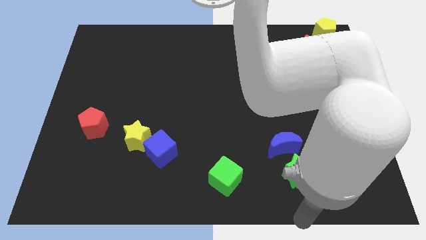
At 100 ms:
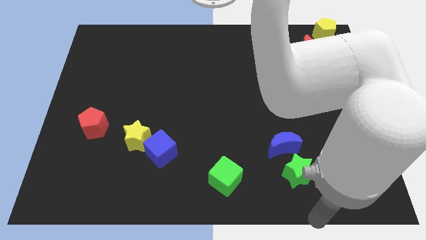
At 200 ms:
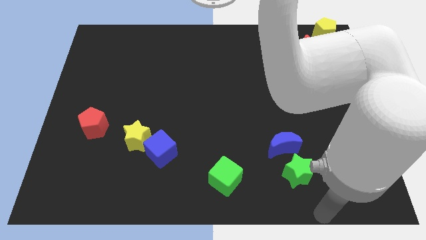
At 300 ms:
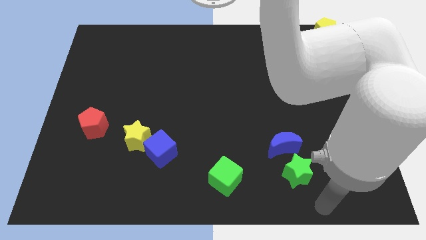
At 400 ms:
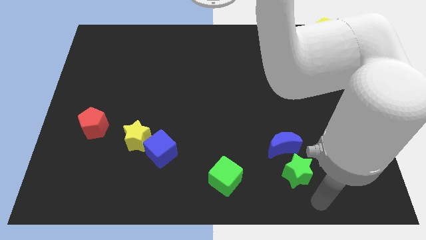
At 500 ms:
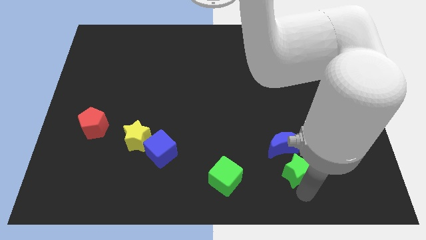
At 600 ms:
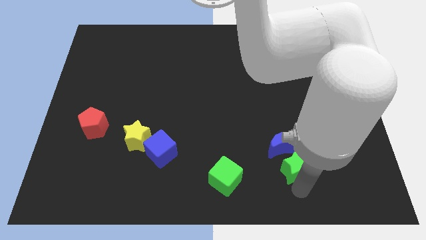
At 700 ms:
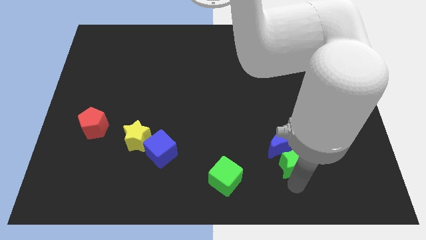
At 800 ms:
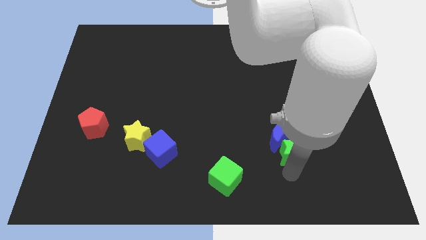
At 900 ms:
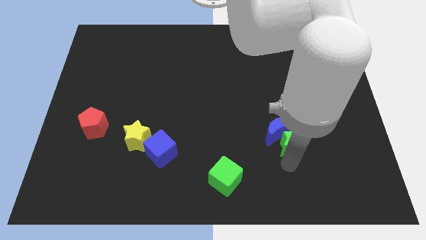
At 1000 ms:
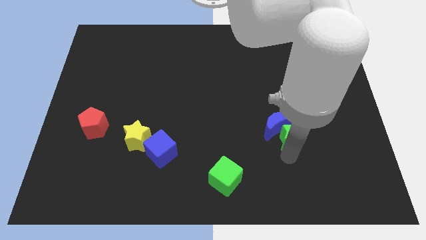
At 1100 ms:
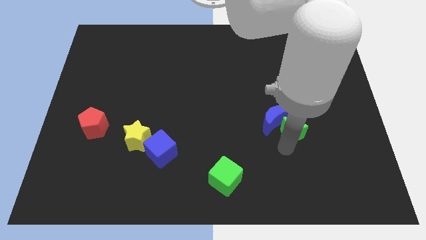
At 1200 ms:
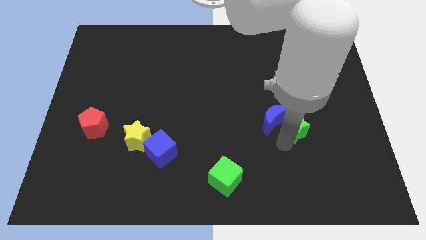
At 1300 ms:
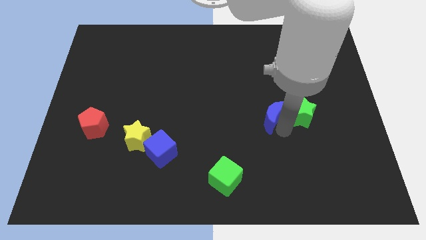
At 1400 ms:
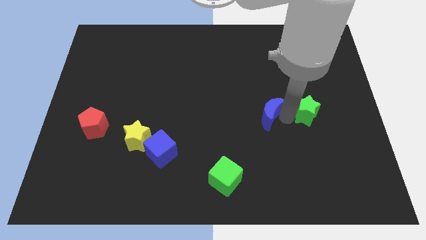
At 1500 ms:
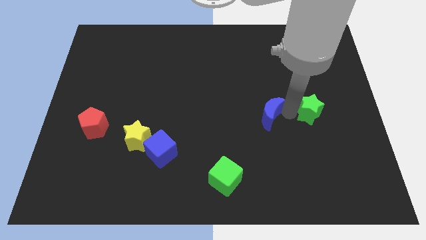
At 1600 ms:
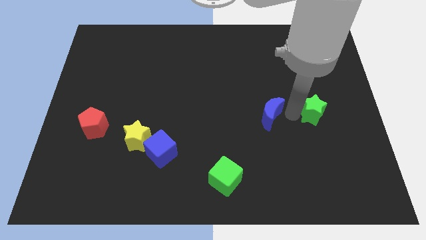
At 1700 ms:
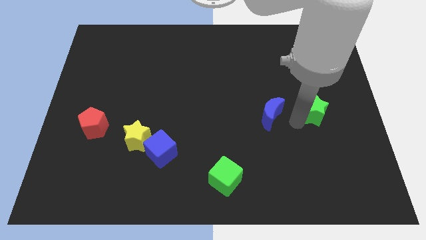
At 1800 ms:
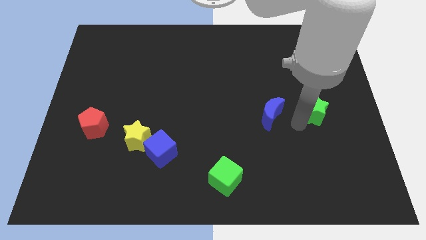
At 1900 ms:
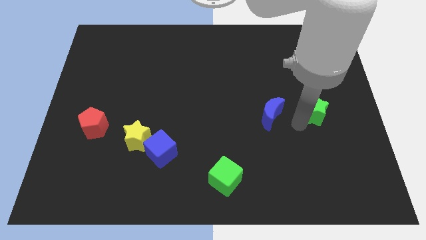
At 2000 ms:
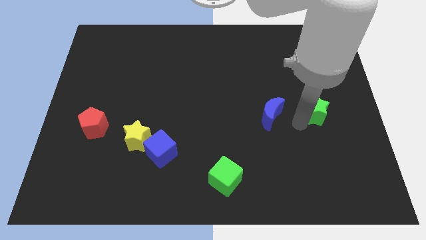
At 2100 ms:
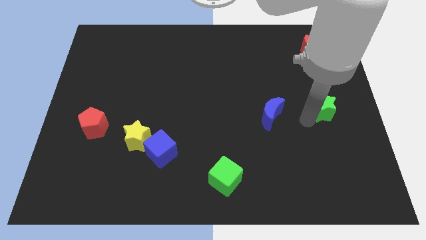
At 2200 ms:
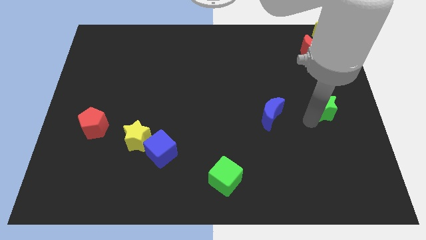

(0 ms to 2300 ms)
push green star towards center right side of the board

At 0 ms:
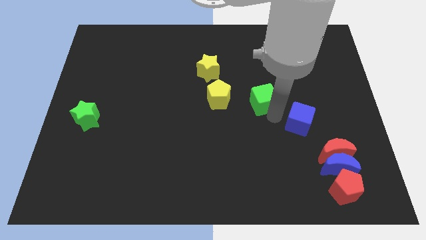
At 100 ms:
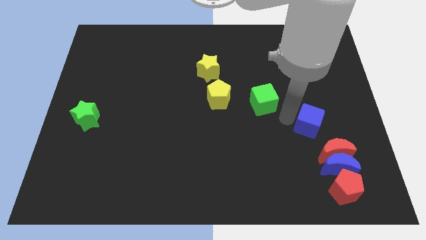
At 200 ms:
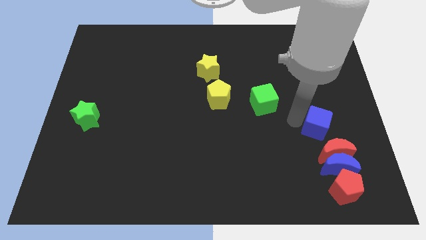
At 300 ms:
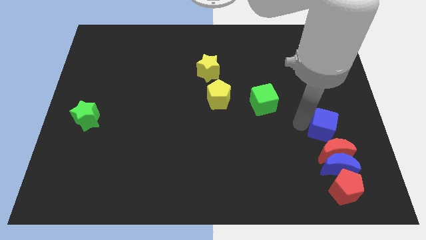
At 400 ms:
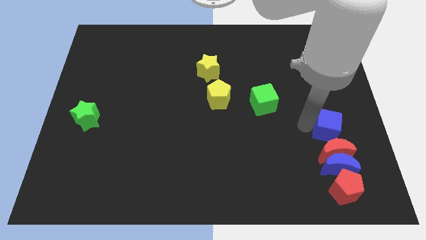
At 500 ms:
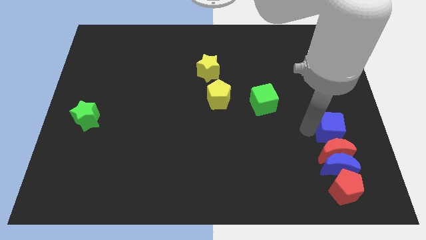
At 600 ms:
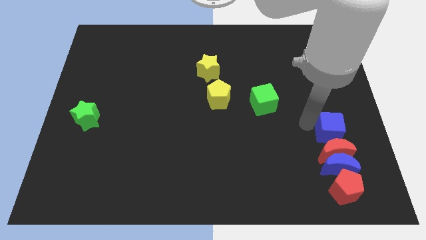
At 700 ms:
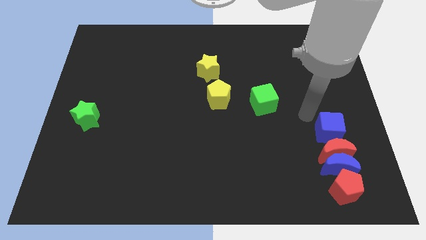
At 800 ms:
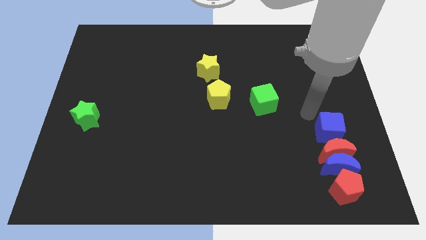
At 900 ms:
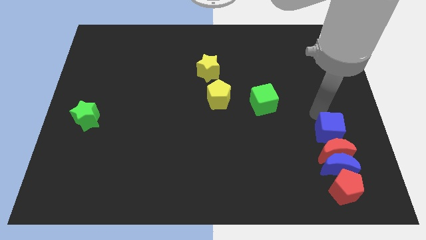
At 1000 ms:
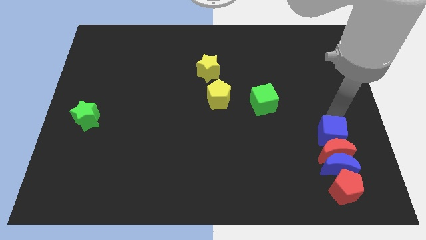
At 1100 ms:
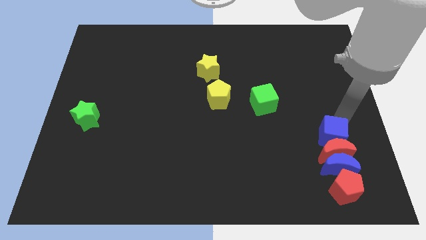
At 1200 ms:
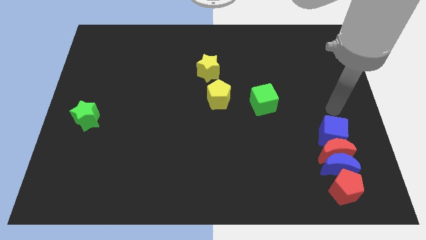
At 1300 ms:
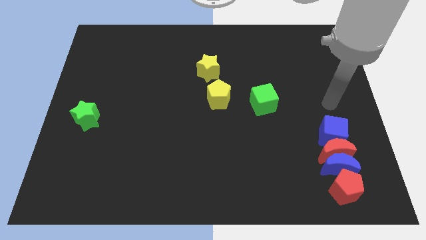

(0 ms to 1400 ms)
place blue cube above the red crescent

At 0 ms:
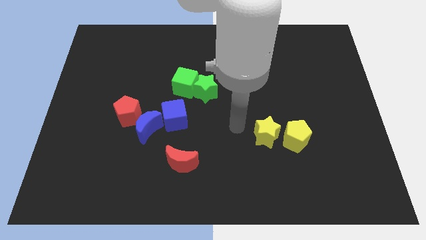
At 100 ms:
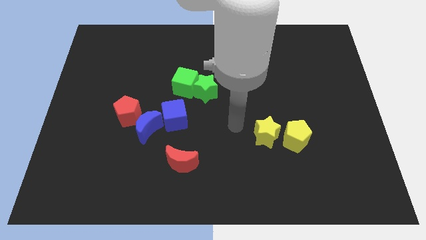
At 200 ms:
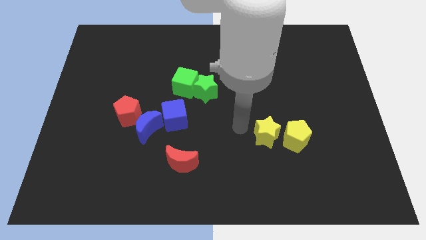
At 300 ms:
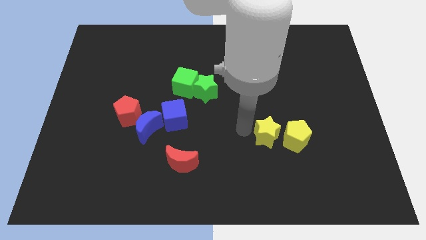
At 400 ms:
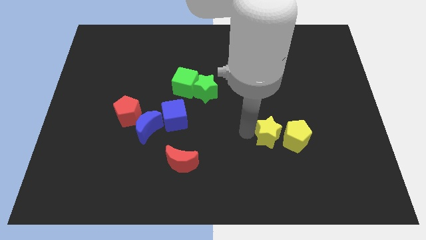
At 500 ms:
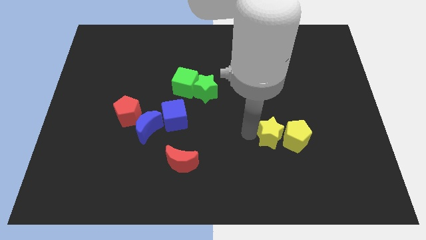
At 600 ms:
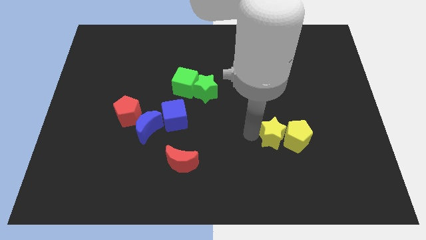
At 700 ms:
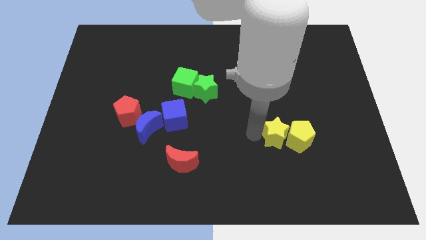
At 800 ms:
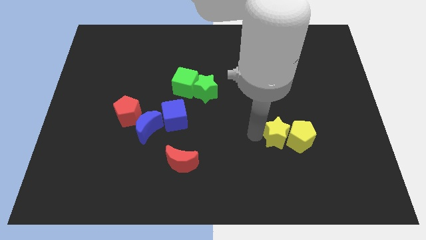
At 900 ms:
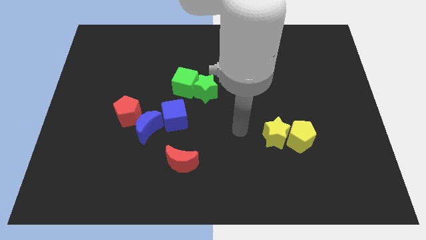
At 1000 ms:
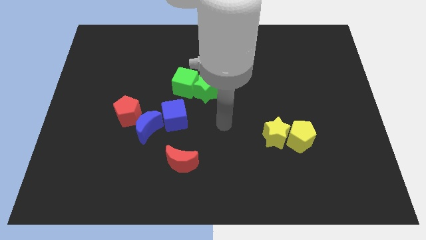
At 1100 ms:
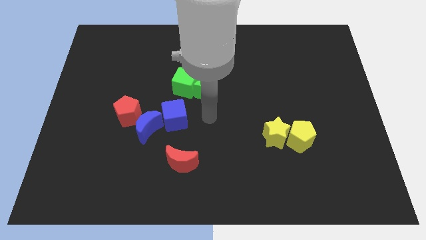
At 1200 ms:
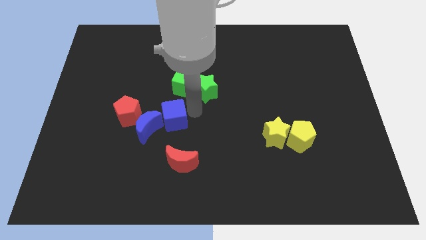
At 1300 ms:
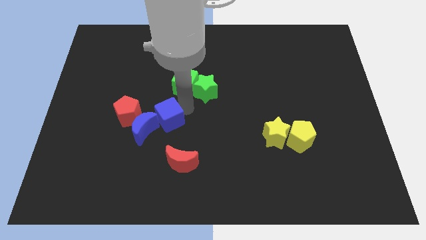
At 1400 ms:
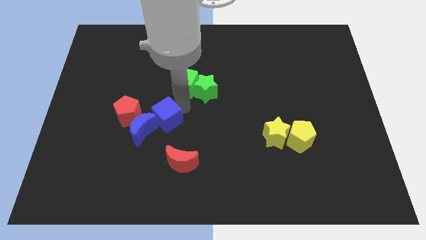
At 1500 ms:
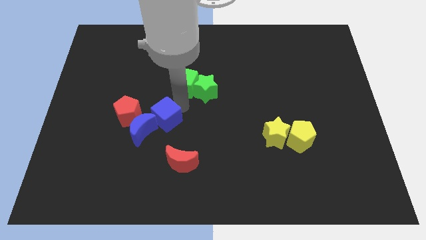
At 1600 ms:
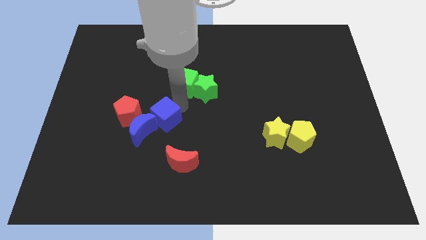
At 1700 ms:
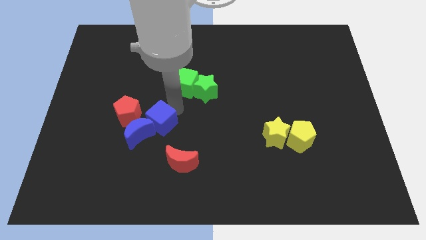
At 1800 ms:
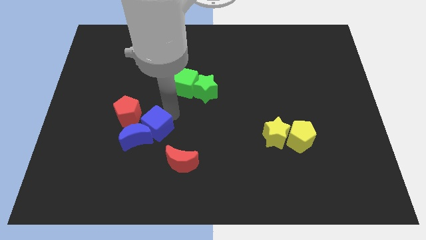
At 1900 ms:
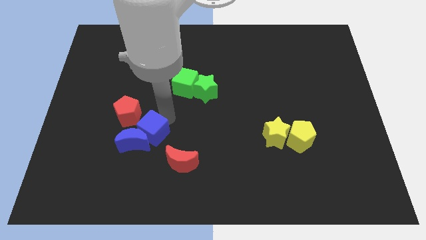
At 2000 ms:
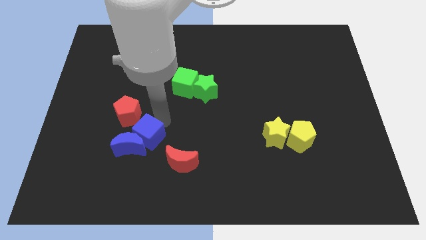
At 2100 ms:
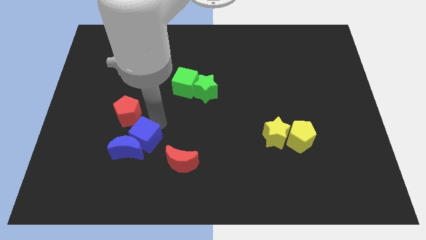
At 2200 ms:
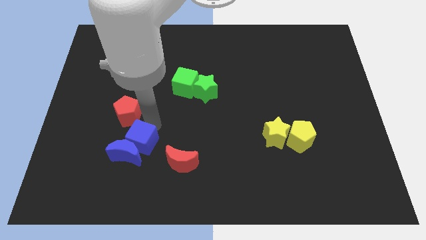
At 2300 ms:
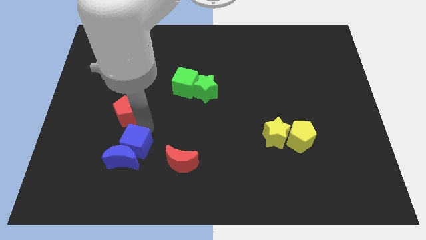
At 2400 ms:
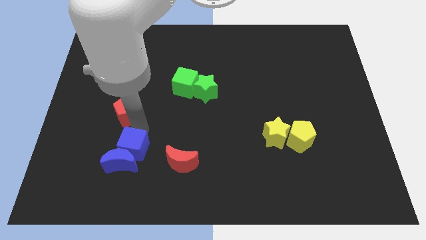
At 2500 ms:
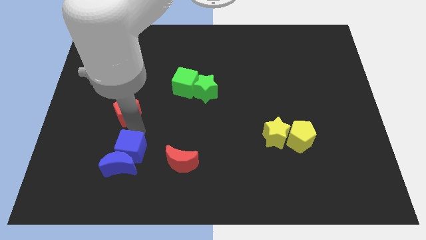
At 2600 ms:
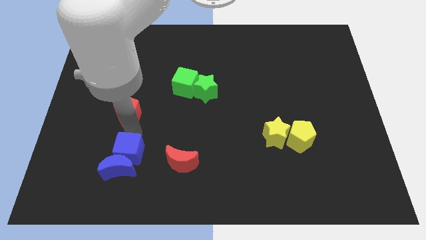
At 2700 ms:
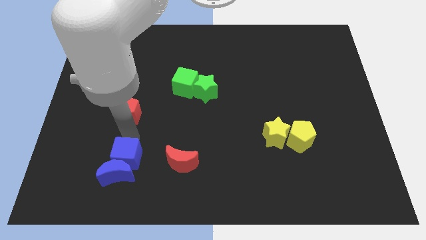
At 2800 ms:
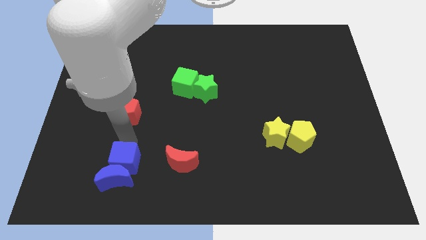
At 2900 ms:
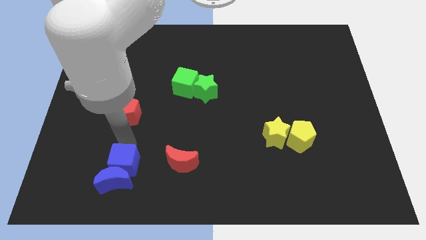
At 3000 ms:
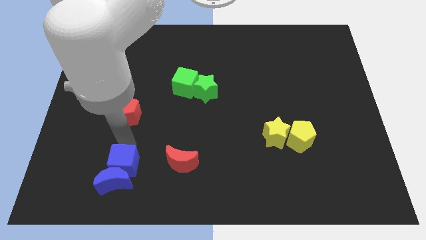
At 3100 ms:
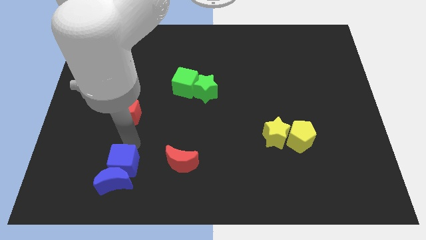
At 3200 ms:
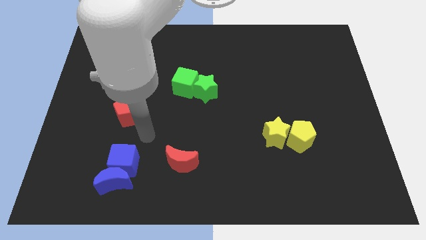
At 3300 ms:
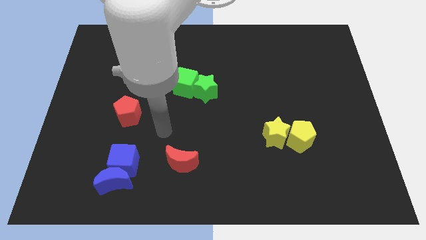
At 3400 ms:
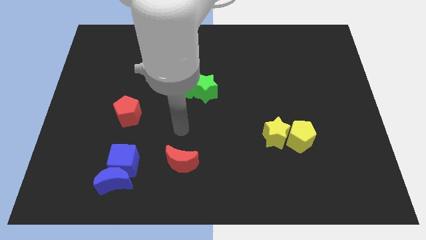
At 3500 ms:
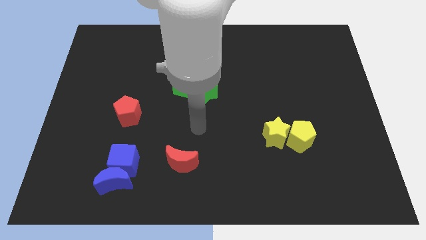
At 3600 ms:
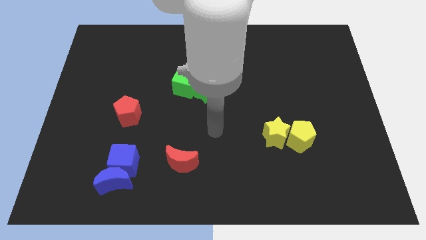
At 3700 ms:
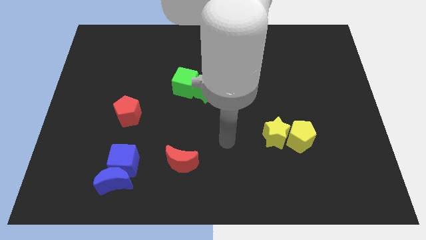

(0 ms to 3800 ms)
drag both the blue cube and blue crescent towards the bottom side of the board

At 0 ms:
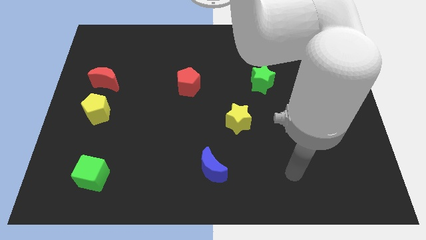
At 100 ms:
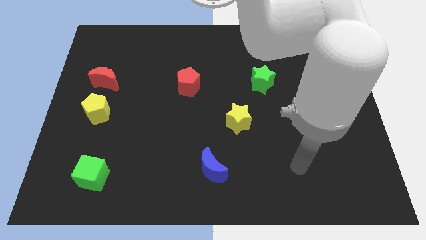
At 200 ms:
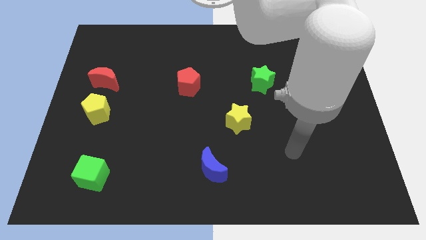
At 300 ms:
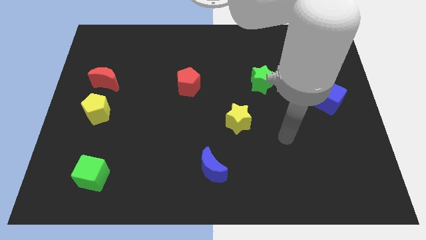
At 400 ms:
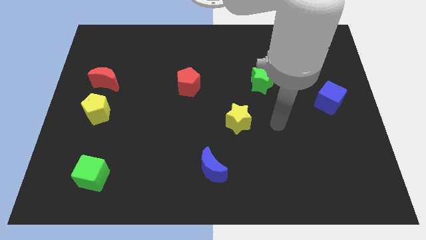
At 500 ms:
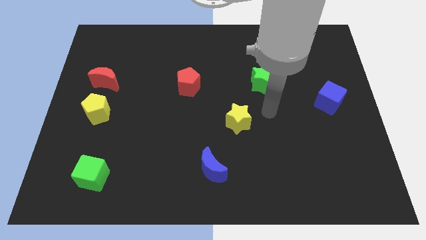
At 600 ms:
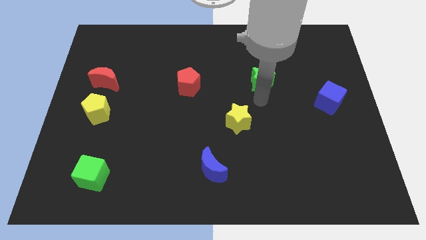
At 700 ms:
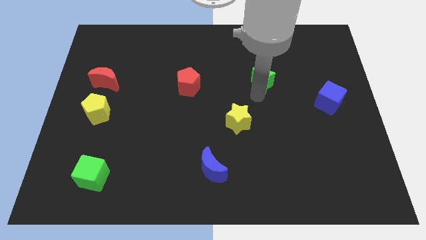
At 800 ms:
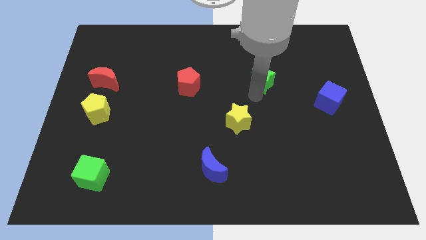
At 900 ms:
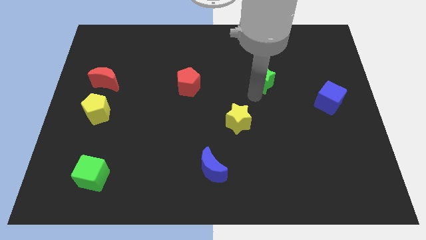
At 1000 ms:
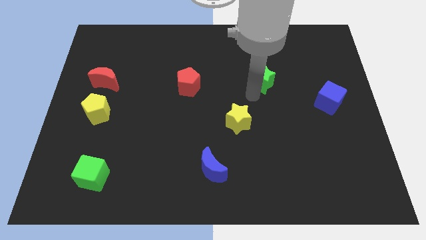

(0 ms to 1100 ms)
place your arm to the bottom of the green star

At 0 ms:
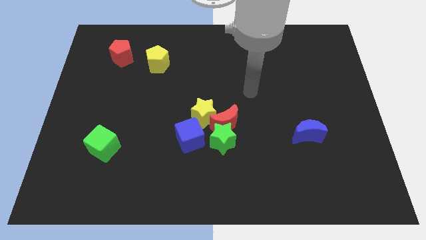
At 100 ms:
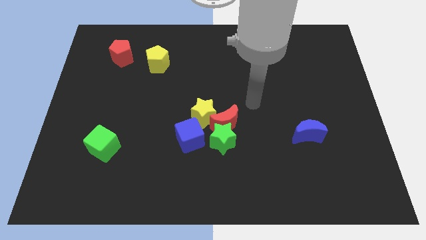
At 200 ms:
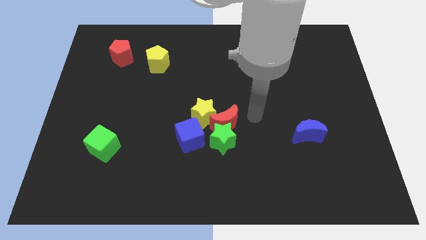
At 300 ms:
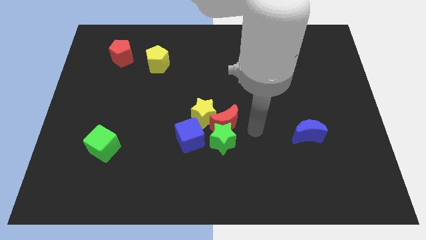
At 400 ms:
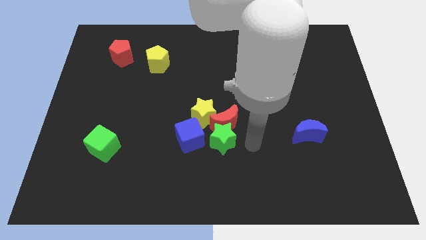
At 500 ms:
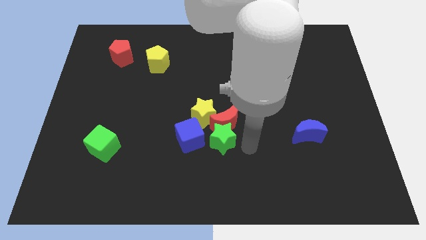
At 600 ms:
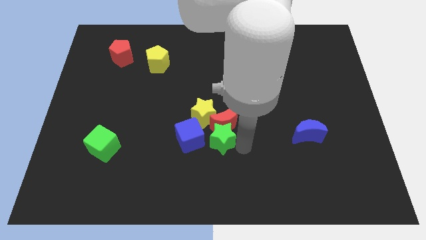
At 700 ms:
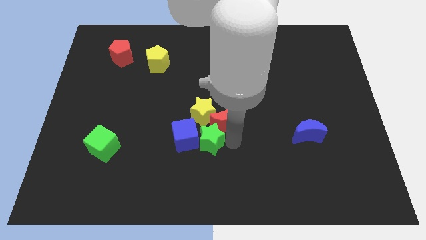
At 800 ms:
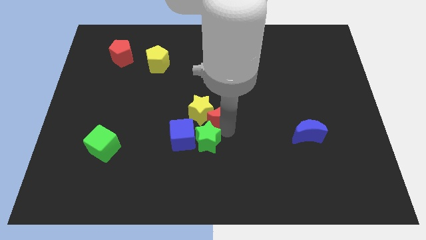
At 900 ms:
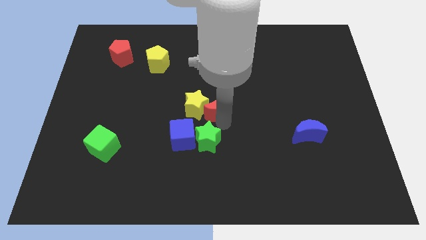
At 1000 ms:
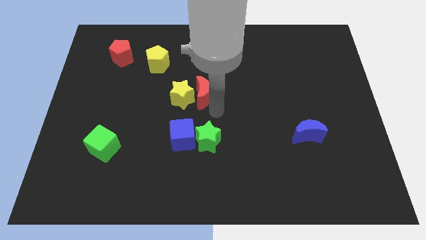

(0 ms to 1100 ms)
separate the red moon and yellow star from the green star
